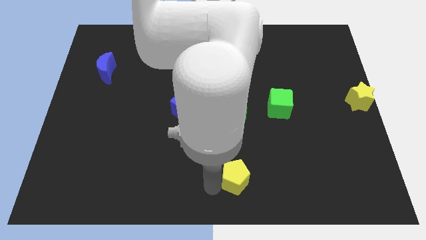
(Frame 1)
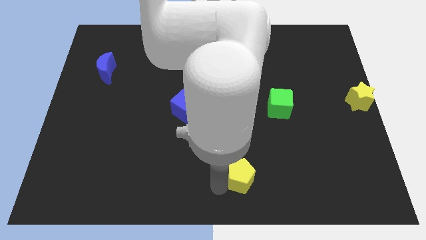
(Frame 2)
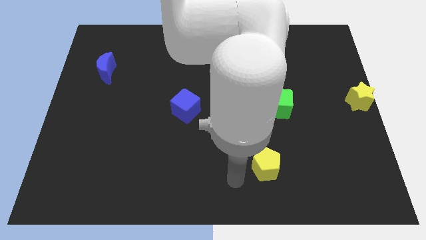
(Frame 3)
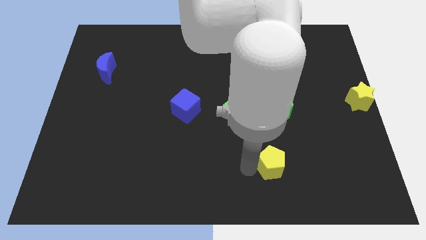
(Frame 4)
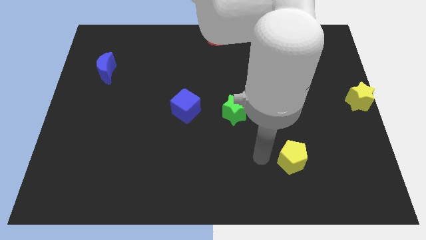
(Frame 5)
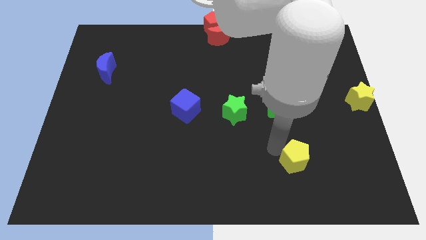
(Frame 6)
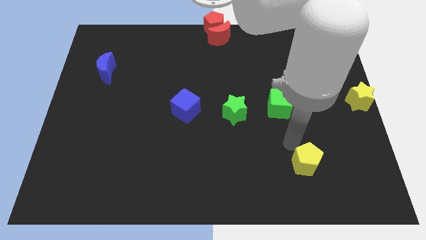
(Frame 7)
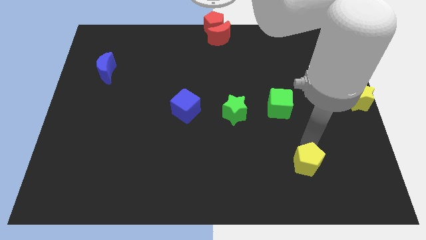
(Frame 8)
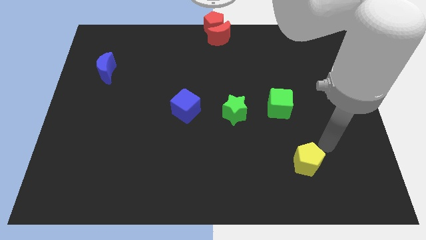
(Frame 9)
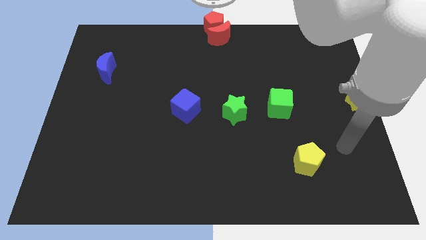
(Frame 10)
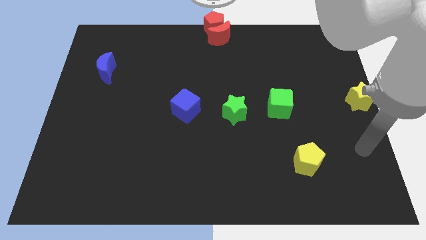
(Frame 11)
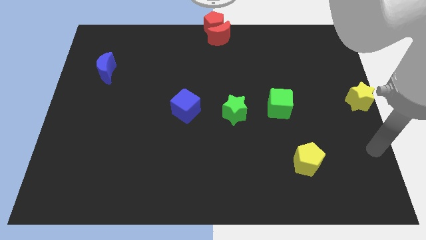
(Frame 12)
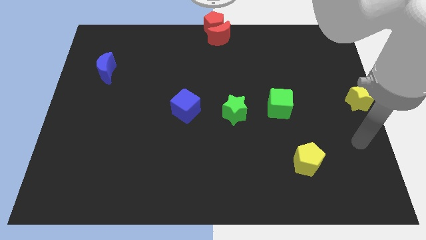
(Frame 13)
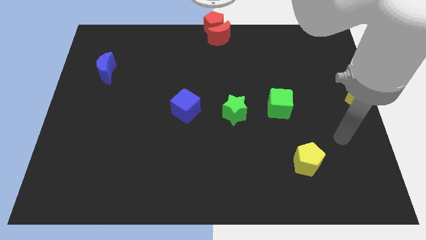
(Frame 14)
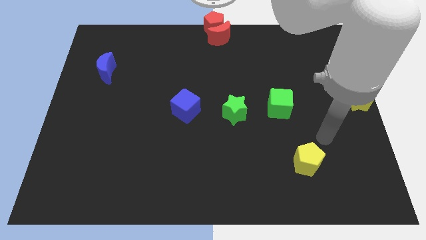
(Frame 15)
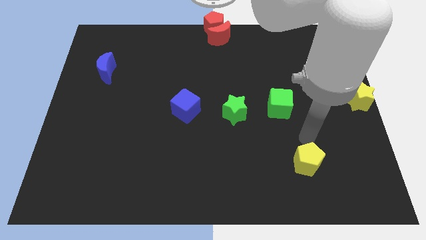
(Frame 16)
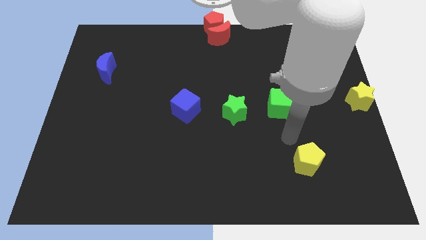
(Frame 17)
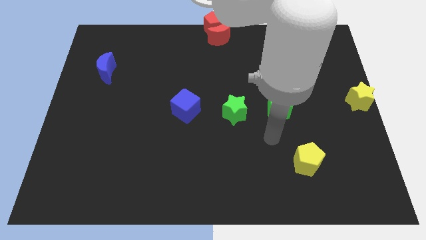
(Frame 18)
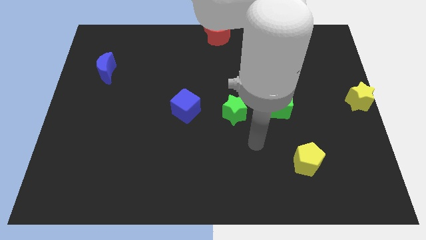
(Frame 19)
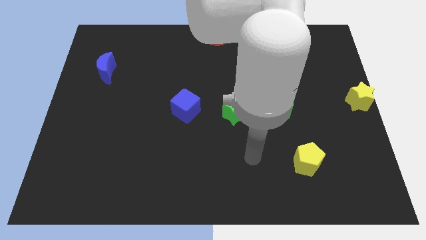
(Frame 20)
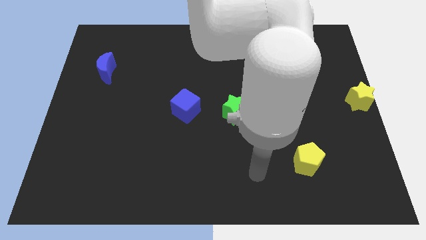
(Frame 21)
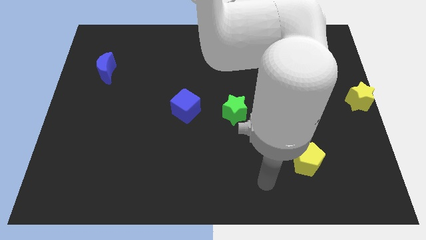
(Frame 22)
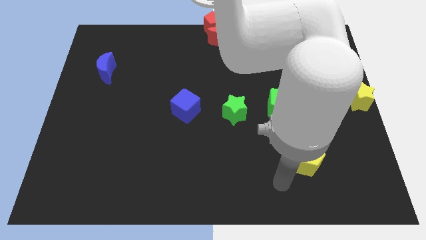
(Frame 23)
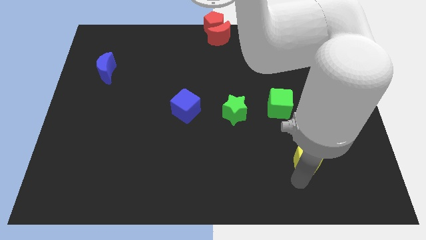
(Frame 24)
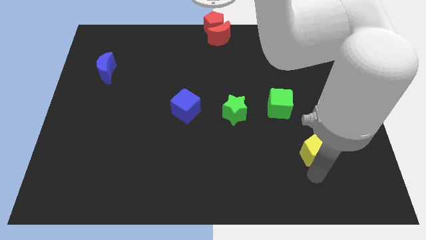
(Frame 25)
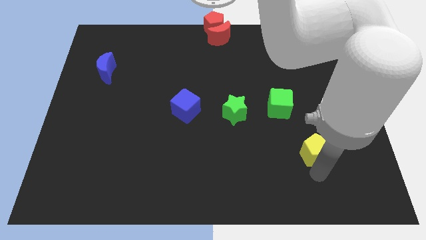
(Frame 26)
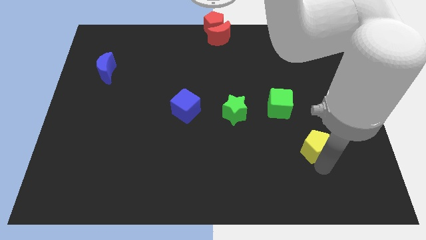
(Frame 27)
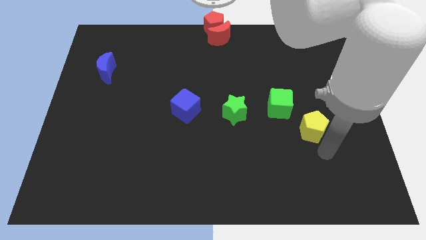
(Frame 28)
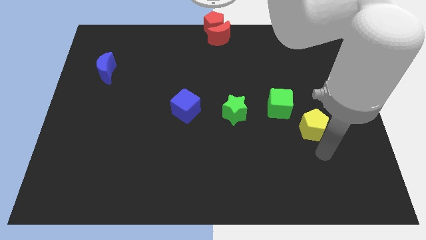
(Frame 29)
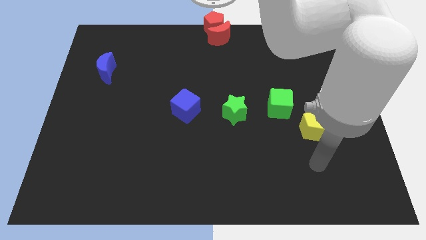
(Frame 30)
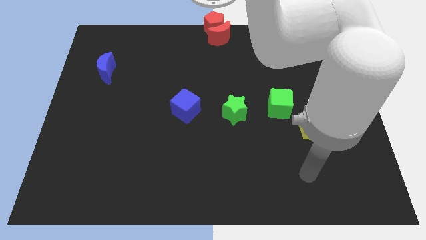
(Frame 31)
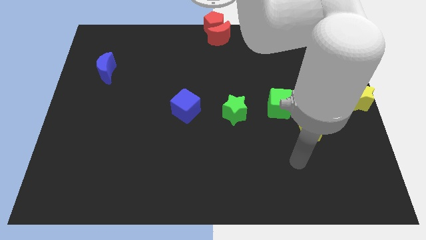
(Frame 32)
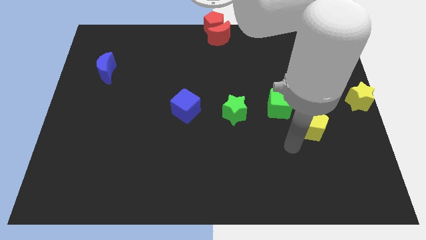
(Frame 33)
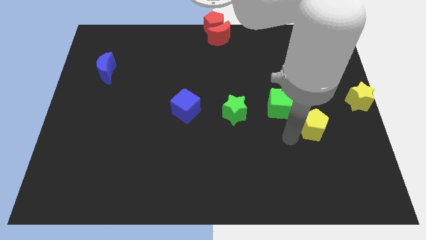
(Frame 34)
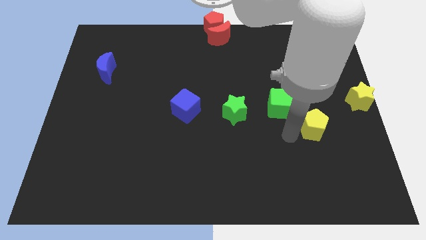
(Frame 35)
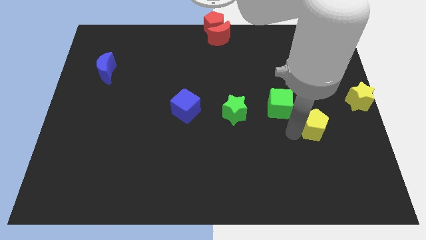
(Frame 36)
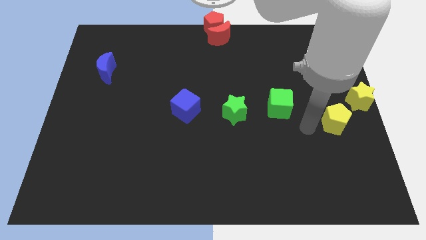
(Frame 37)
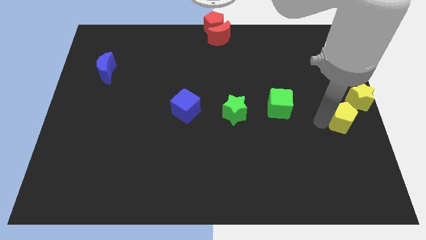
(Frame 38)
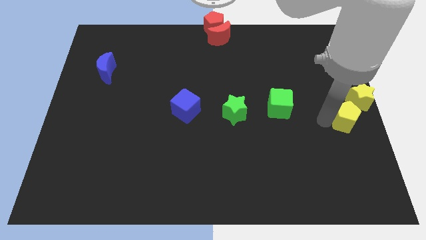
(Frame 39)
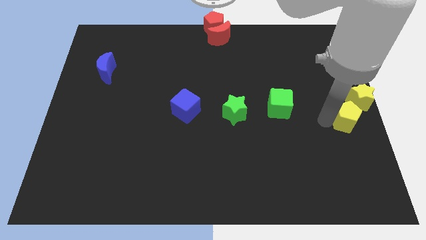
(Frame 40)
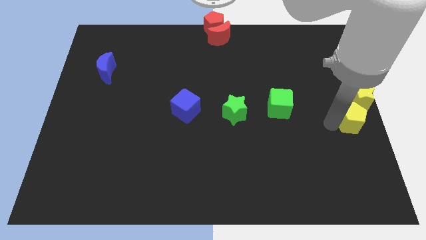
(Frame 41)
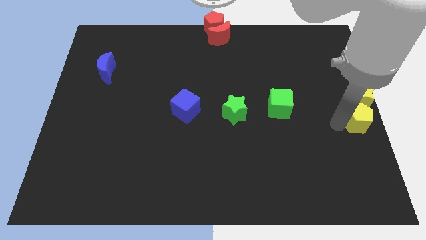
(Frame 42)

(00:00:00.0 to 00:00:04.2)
push the yellow pentagon towards the yellow star

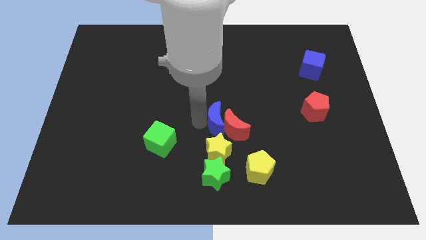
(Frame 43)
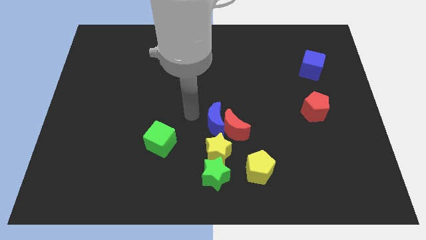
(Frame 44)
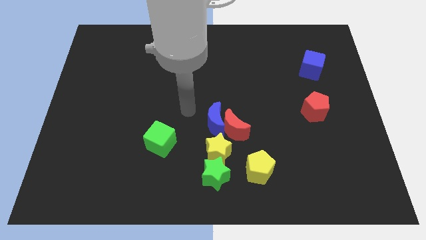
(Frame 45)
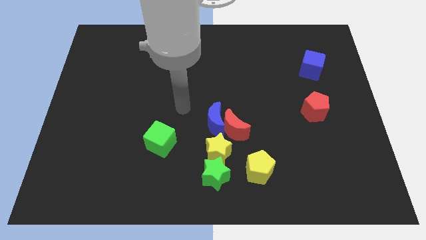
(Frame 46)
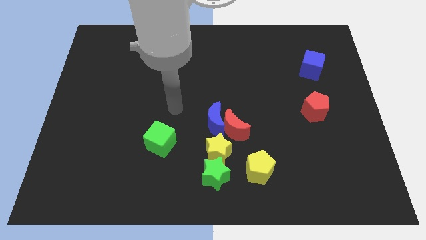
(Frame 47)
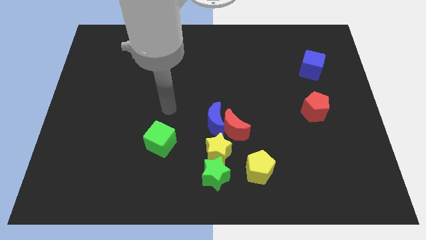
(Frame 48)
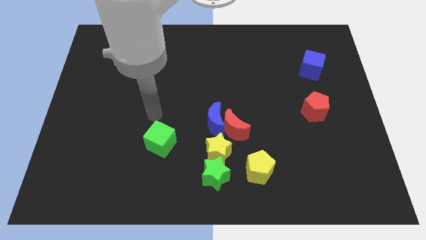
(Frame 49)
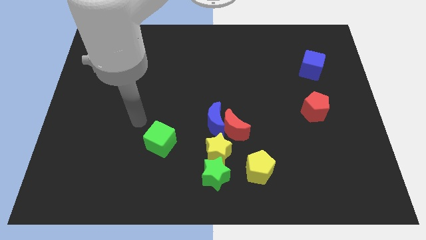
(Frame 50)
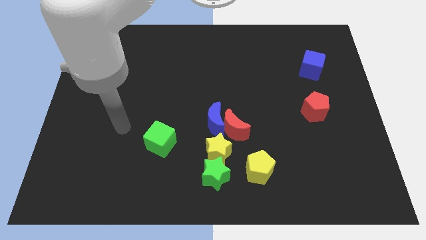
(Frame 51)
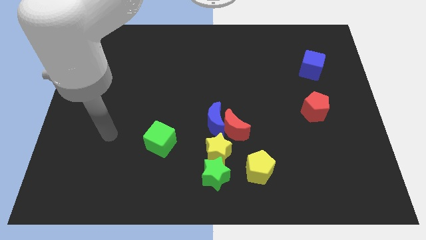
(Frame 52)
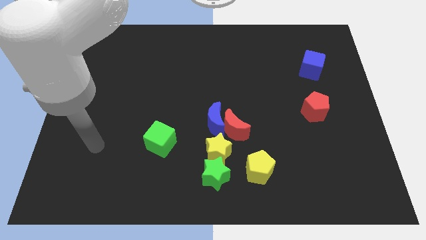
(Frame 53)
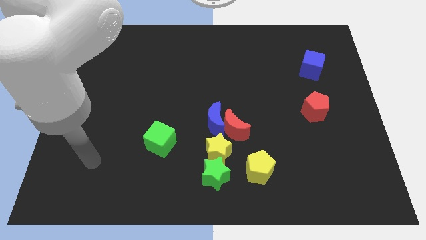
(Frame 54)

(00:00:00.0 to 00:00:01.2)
move your arm to the bottom left of the board

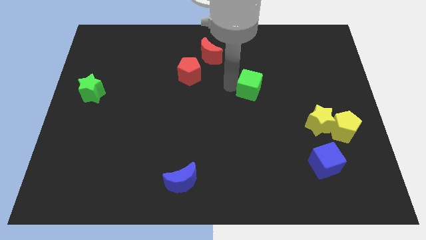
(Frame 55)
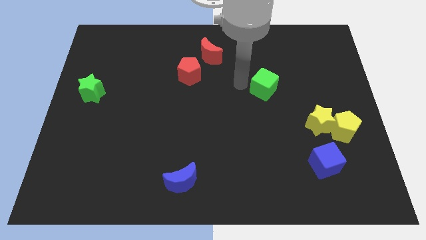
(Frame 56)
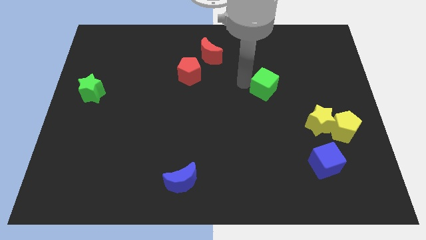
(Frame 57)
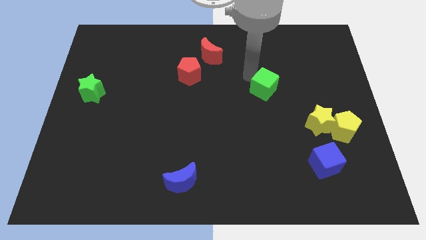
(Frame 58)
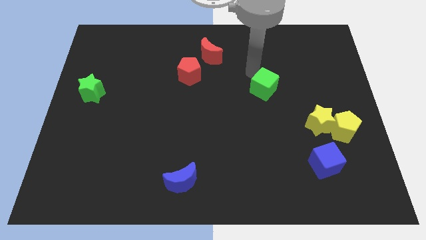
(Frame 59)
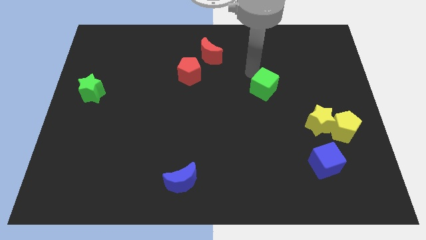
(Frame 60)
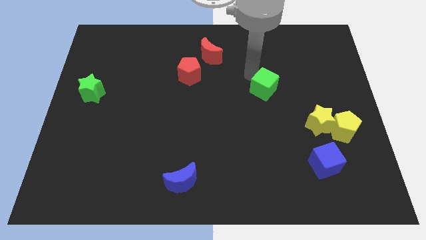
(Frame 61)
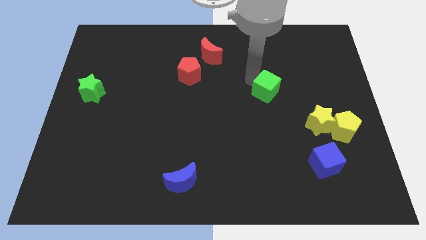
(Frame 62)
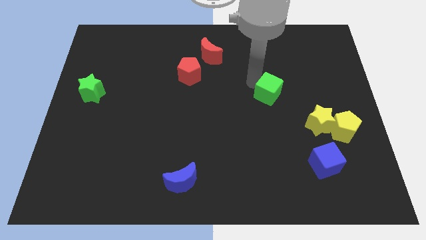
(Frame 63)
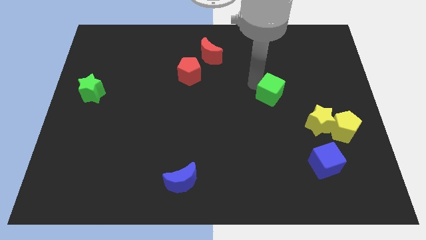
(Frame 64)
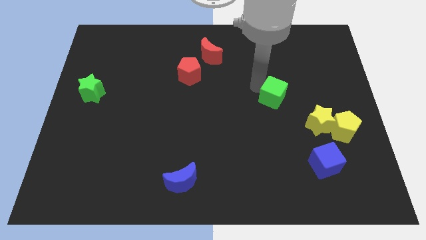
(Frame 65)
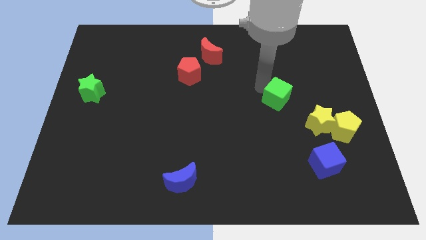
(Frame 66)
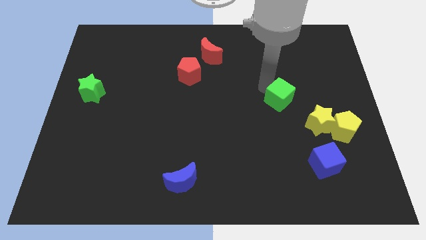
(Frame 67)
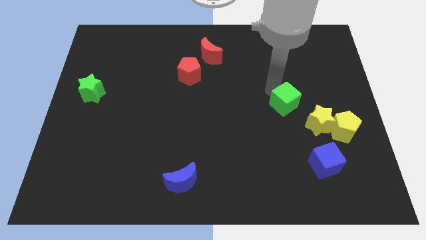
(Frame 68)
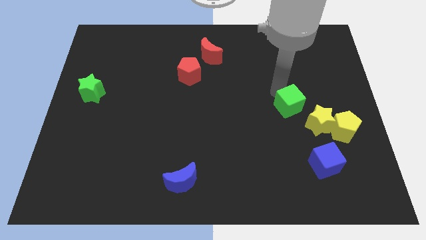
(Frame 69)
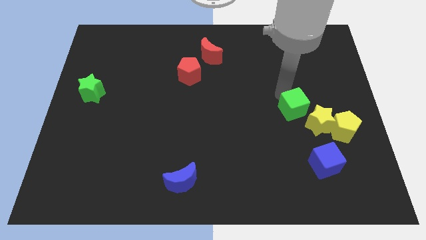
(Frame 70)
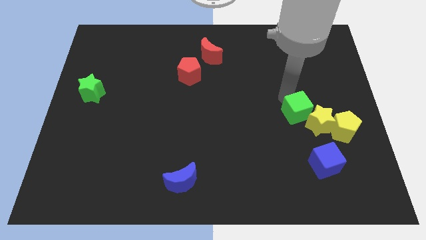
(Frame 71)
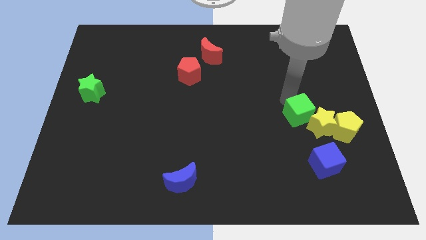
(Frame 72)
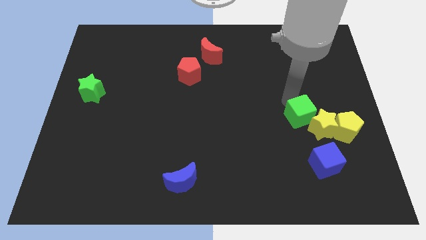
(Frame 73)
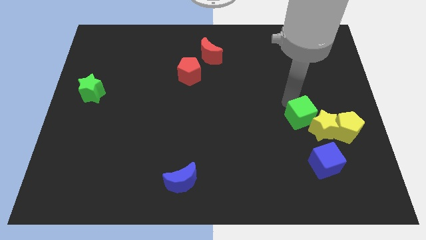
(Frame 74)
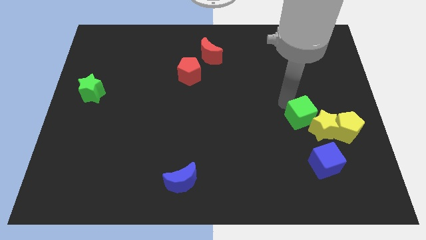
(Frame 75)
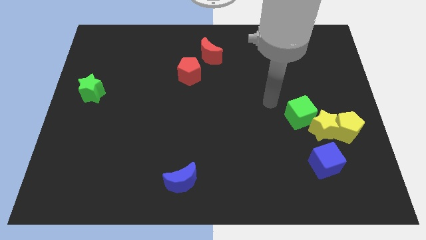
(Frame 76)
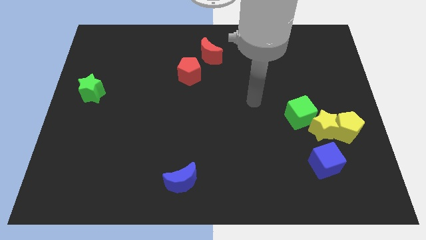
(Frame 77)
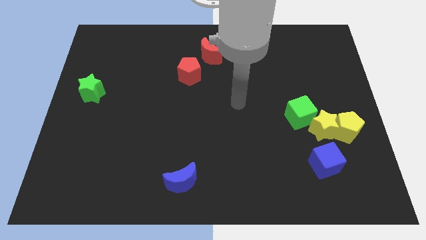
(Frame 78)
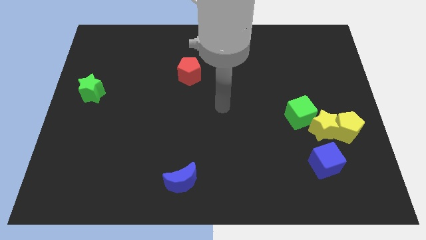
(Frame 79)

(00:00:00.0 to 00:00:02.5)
push the green cube into the yellow star

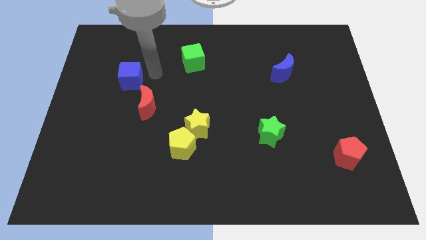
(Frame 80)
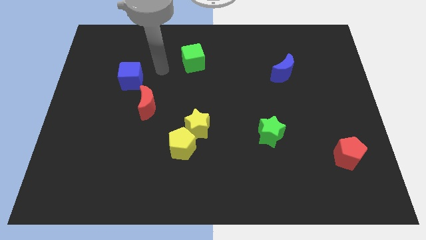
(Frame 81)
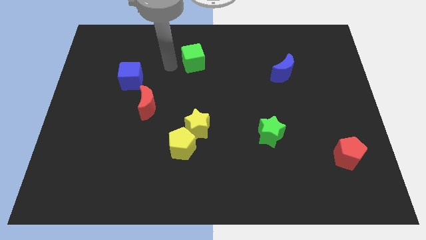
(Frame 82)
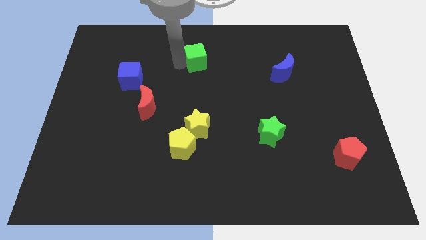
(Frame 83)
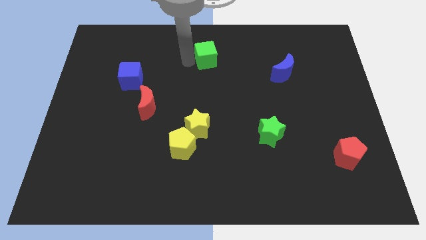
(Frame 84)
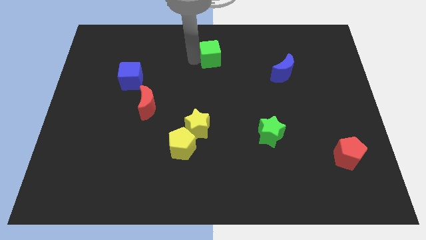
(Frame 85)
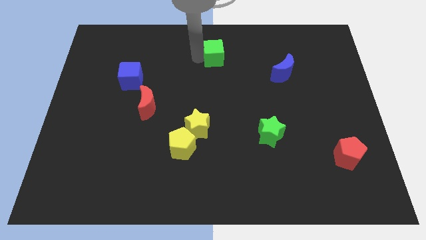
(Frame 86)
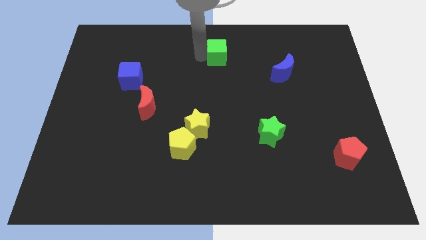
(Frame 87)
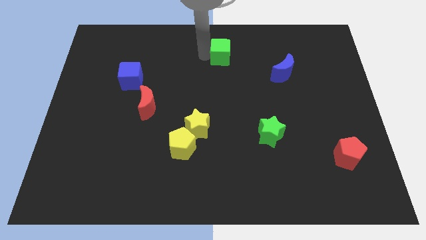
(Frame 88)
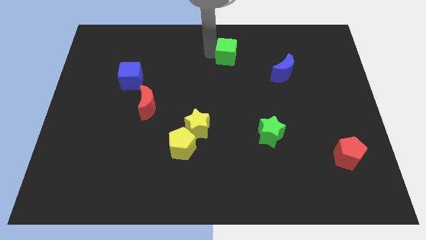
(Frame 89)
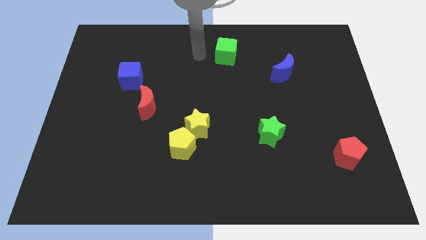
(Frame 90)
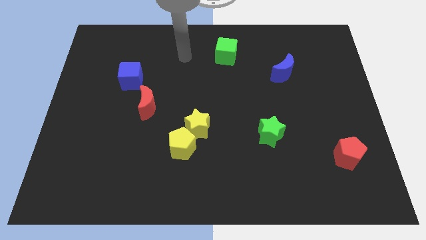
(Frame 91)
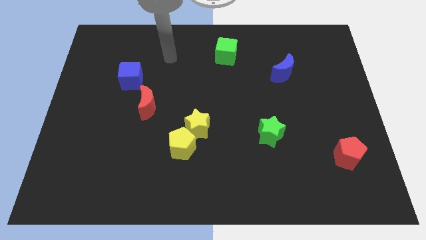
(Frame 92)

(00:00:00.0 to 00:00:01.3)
move the green cube towards the blue moon
